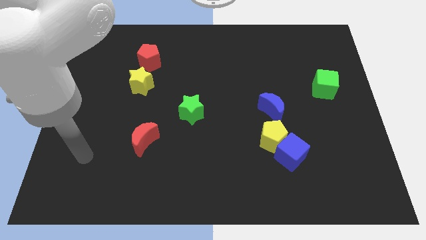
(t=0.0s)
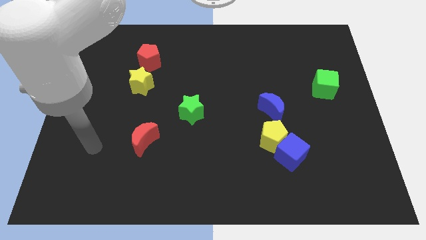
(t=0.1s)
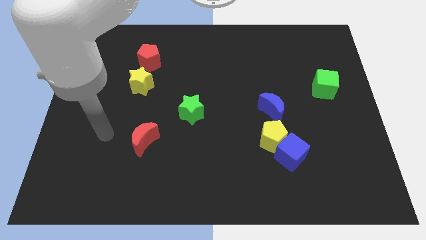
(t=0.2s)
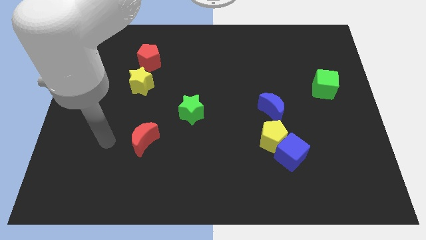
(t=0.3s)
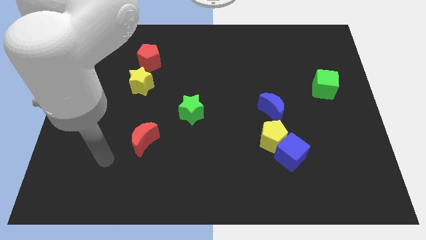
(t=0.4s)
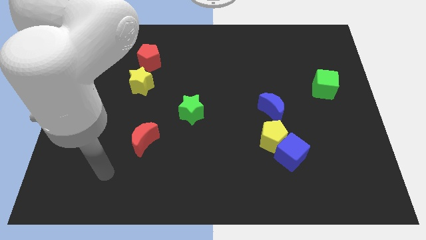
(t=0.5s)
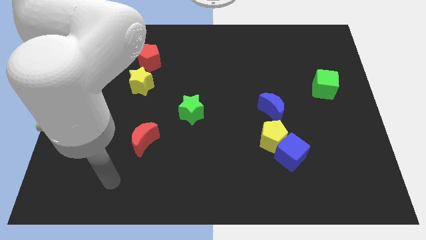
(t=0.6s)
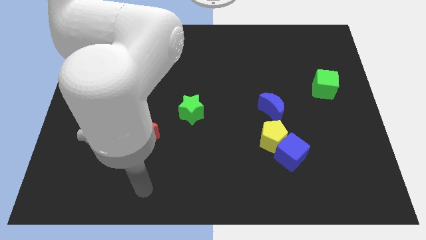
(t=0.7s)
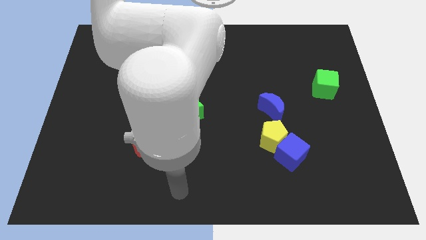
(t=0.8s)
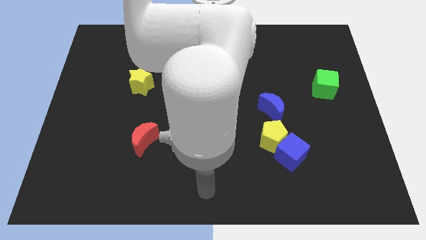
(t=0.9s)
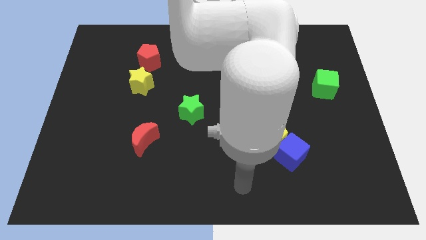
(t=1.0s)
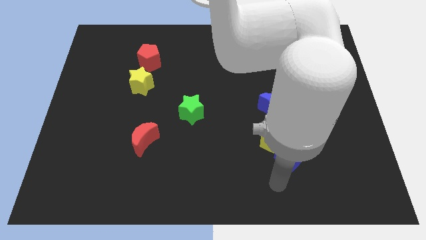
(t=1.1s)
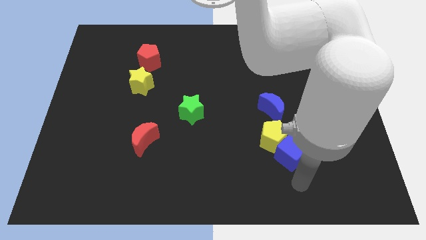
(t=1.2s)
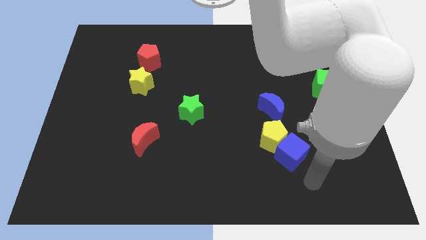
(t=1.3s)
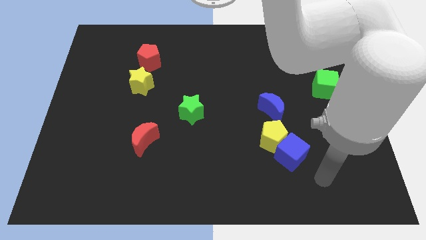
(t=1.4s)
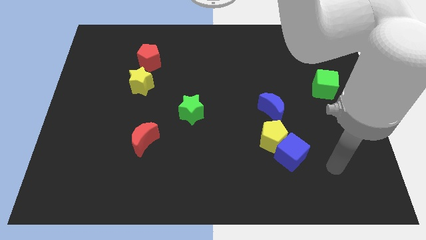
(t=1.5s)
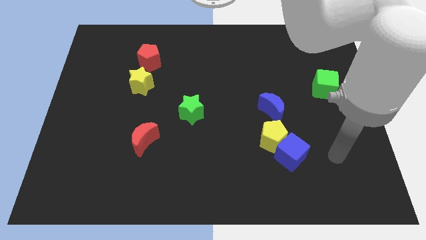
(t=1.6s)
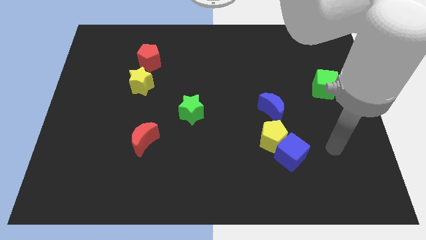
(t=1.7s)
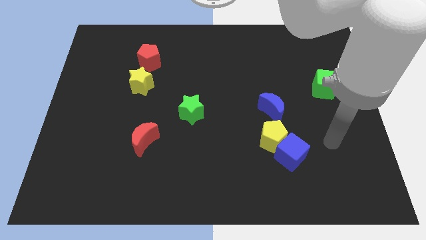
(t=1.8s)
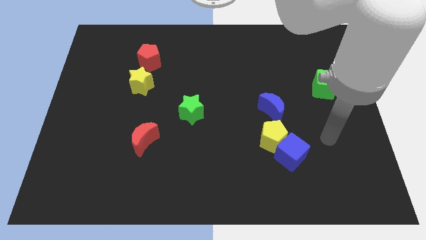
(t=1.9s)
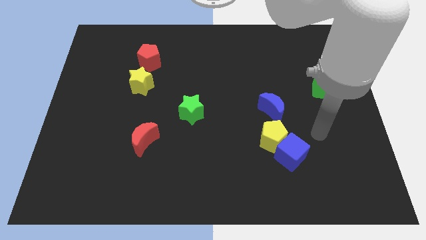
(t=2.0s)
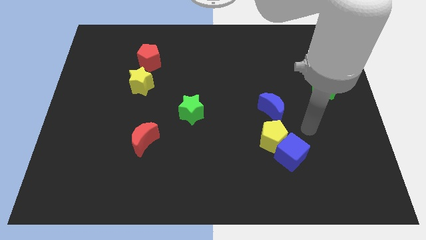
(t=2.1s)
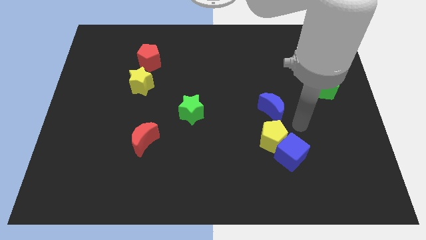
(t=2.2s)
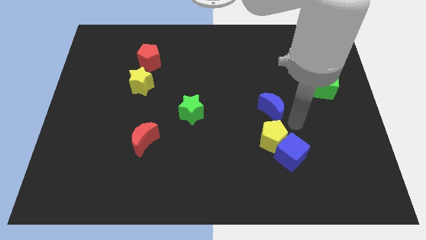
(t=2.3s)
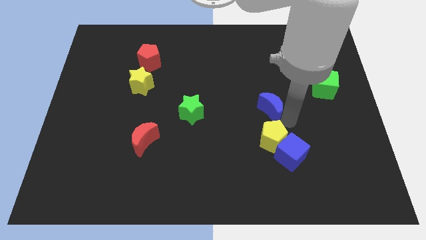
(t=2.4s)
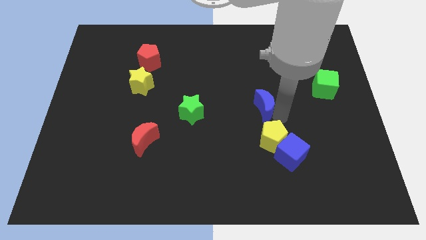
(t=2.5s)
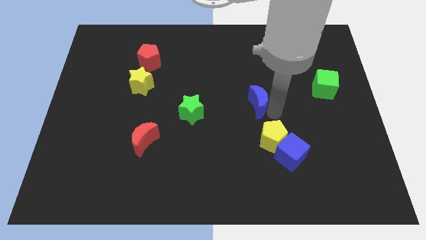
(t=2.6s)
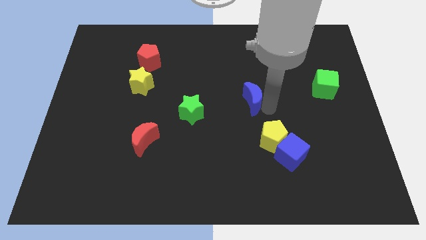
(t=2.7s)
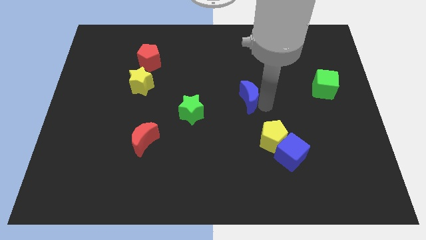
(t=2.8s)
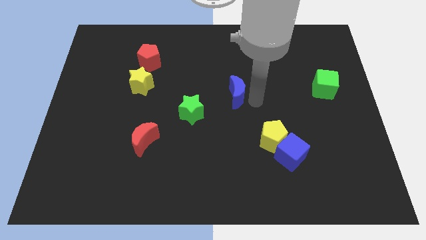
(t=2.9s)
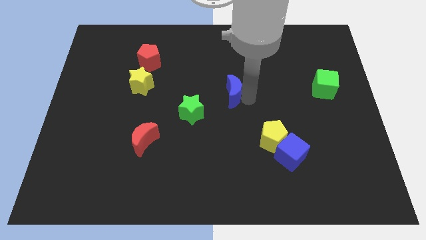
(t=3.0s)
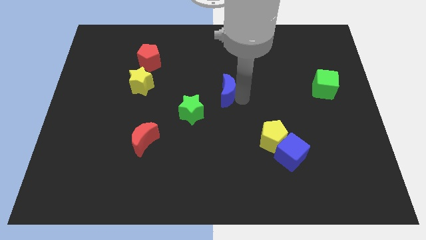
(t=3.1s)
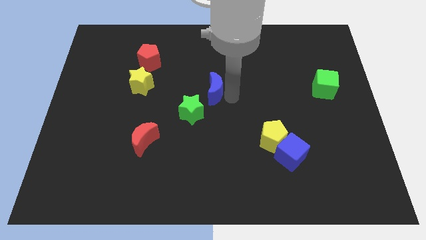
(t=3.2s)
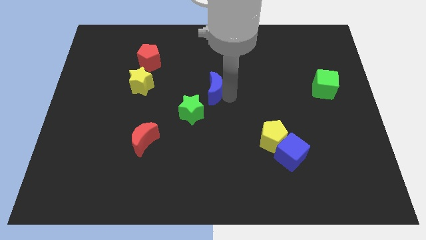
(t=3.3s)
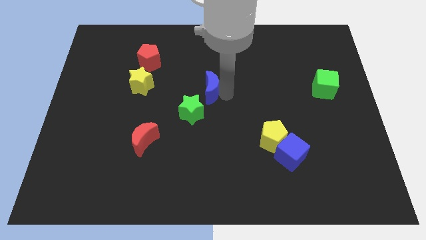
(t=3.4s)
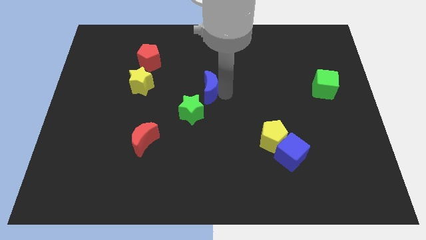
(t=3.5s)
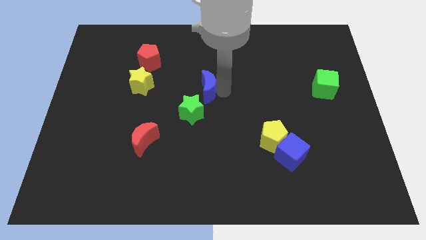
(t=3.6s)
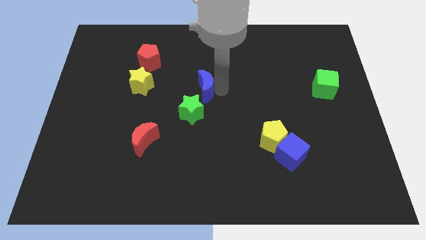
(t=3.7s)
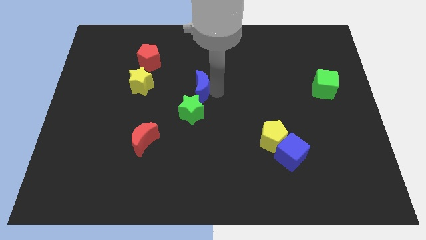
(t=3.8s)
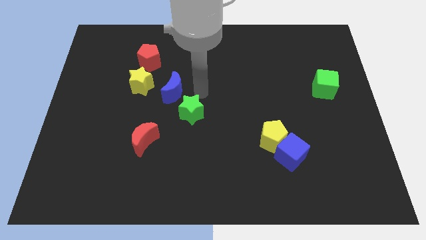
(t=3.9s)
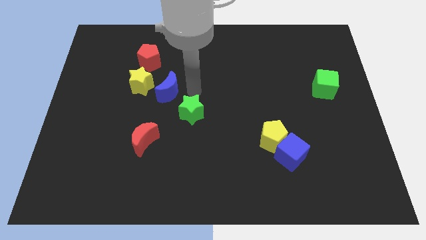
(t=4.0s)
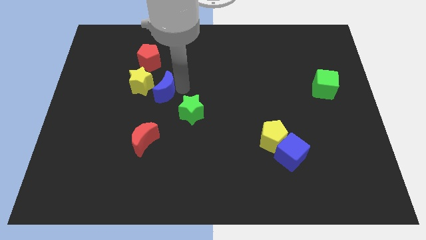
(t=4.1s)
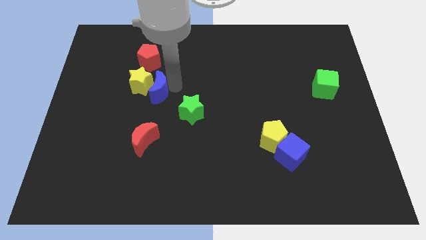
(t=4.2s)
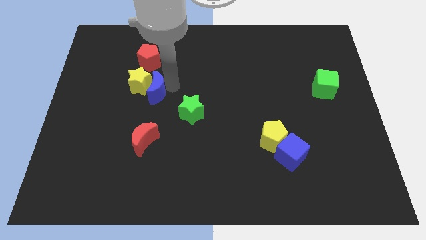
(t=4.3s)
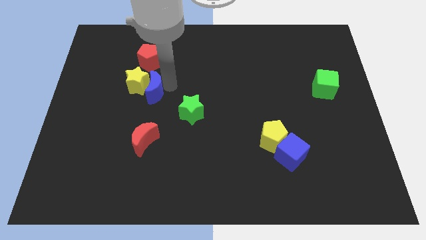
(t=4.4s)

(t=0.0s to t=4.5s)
move the blue moon towards the yellow star

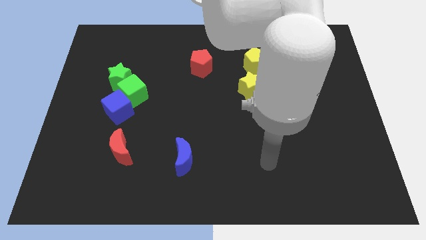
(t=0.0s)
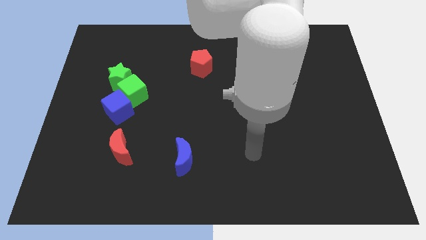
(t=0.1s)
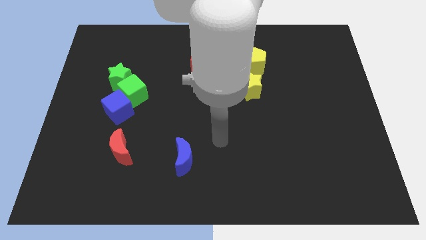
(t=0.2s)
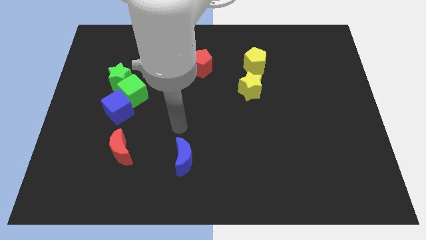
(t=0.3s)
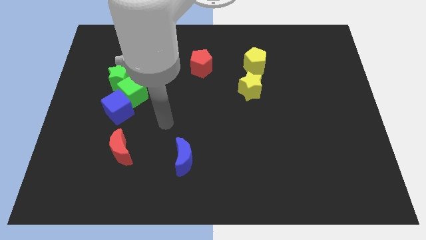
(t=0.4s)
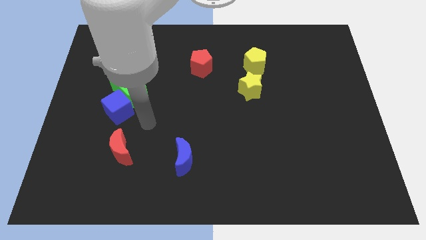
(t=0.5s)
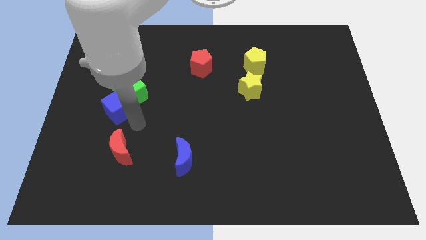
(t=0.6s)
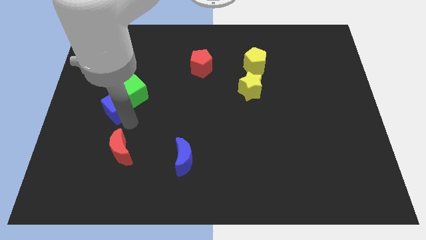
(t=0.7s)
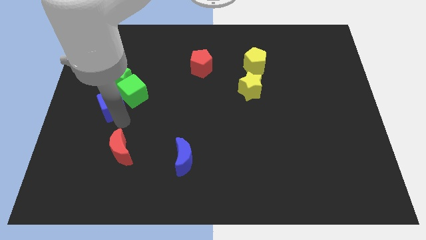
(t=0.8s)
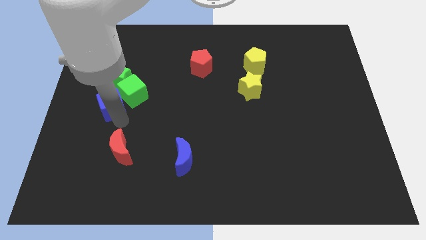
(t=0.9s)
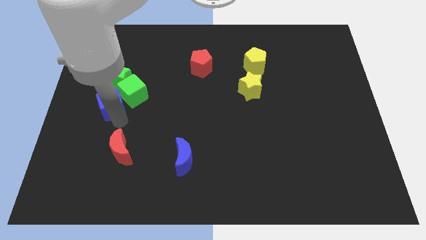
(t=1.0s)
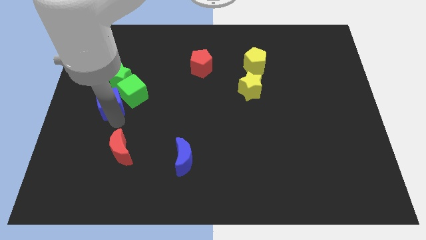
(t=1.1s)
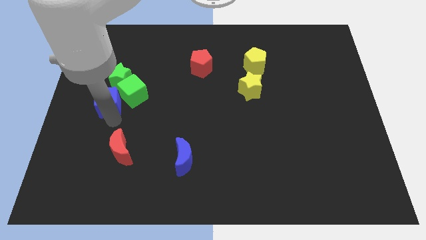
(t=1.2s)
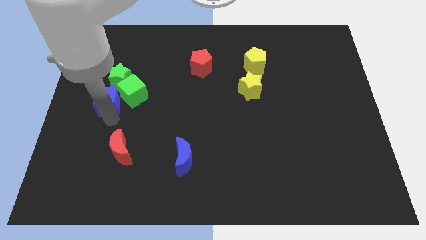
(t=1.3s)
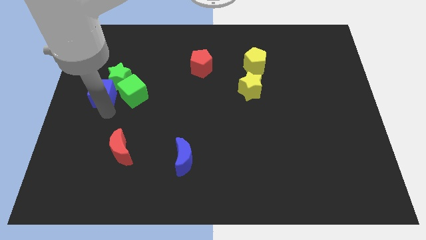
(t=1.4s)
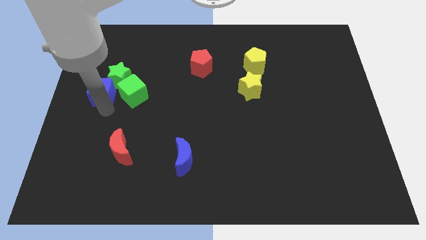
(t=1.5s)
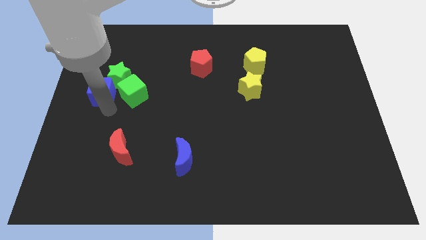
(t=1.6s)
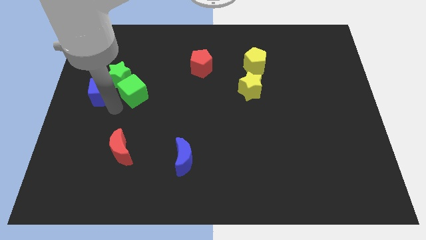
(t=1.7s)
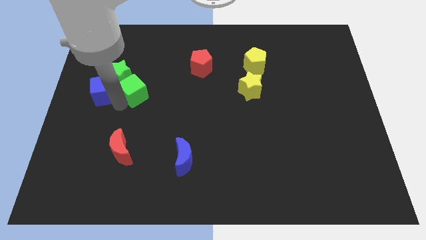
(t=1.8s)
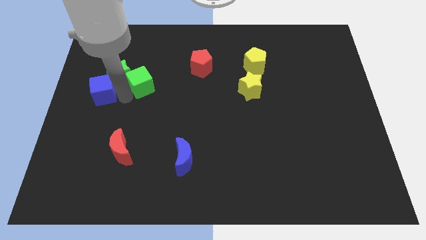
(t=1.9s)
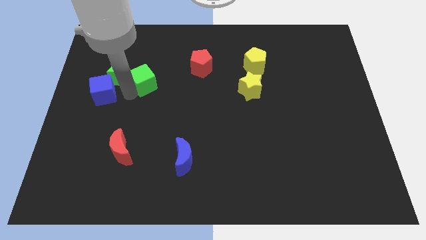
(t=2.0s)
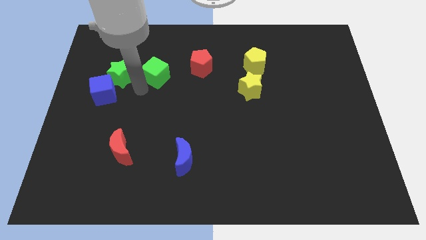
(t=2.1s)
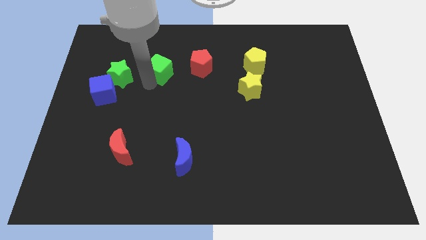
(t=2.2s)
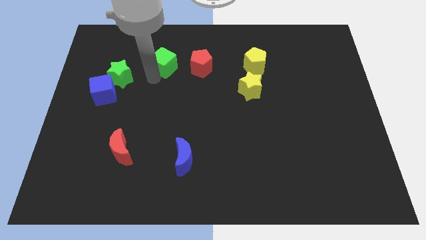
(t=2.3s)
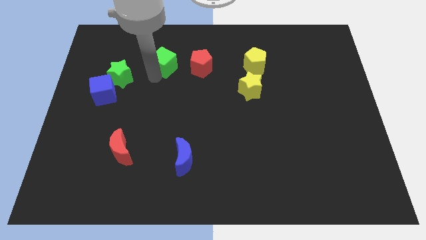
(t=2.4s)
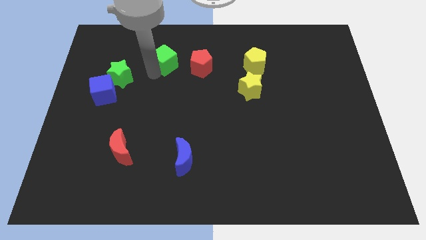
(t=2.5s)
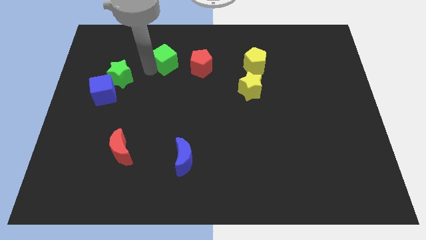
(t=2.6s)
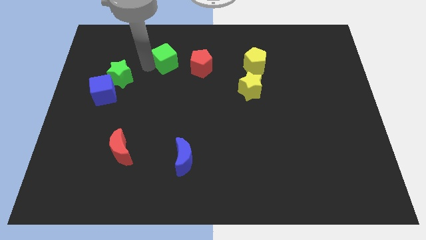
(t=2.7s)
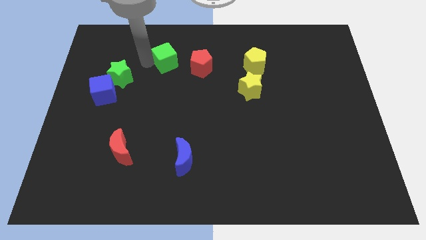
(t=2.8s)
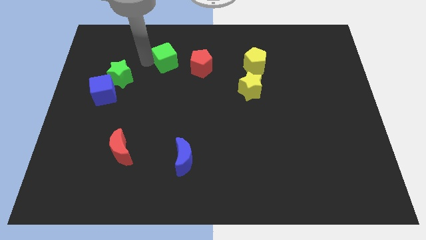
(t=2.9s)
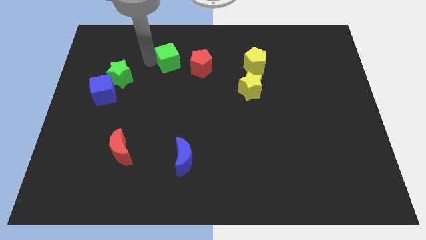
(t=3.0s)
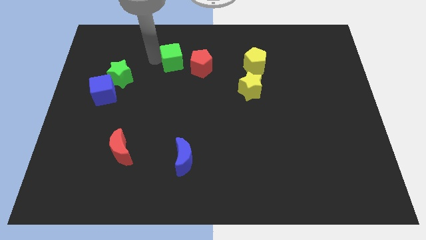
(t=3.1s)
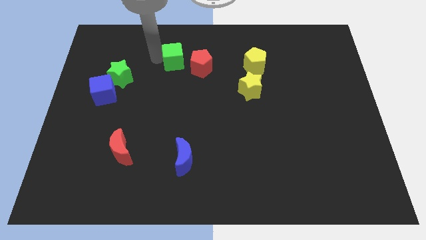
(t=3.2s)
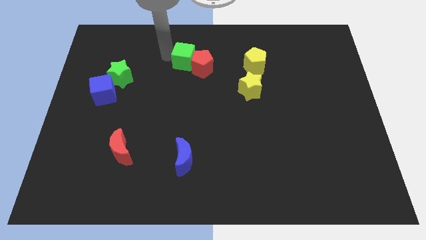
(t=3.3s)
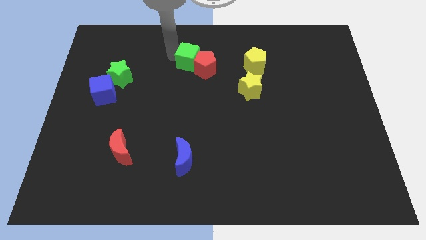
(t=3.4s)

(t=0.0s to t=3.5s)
move the green cube to the red pentagon

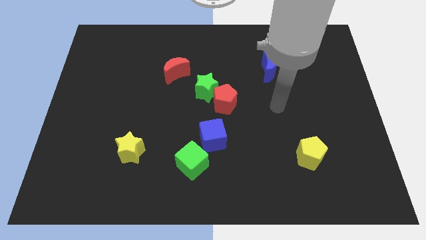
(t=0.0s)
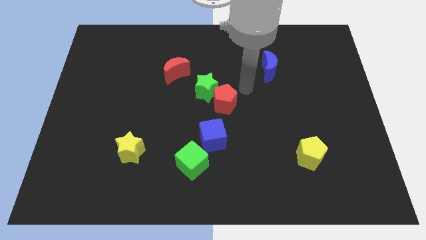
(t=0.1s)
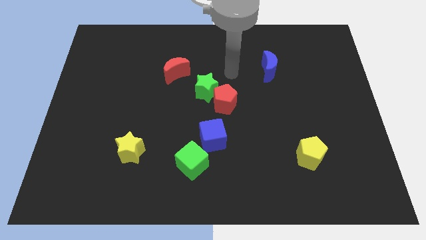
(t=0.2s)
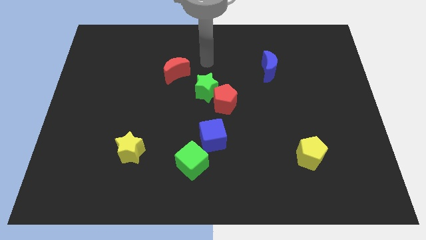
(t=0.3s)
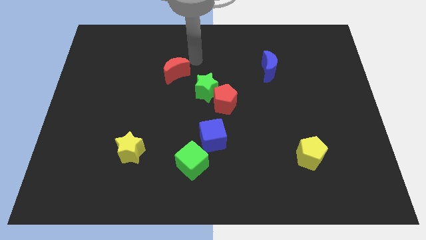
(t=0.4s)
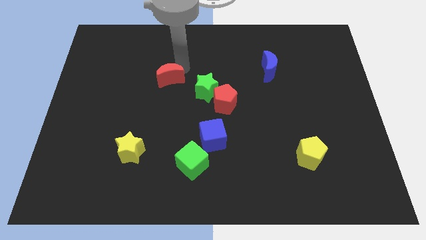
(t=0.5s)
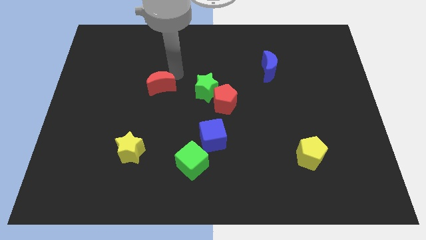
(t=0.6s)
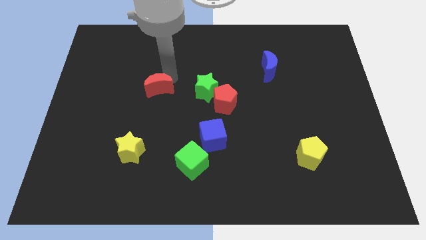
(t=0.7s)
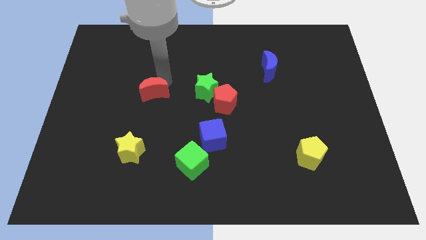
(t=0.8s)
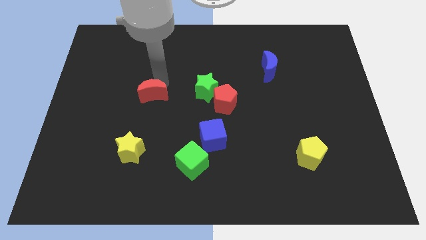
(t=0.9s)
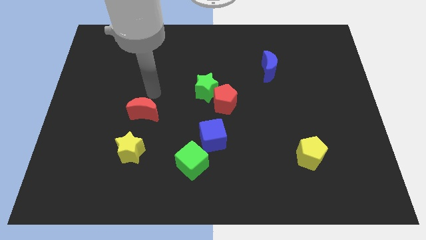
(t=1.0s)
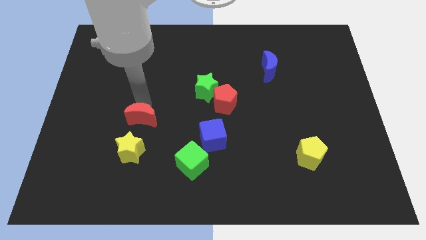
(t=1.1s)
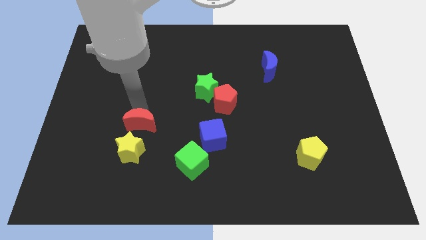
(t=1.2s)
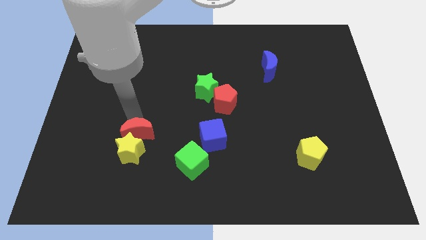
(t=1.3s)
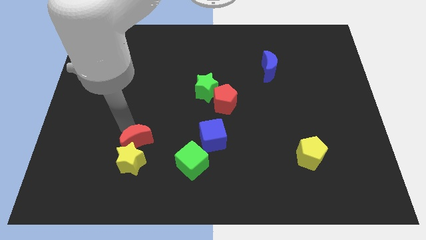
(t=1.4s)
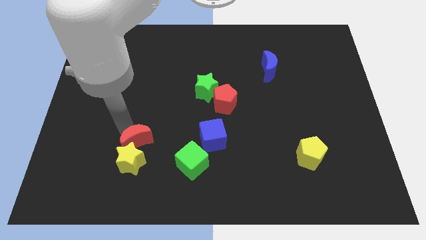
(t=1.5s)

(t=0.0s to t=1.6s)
push the red moon towards the yellow star
